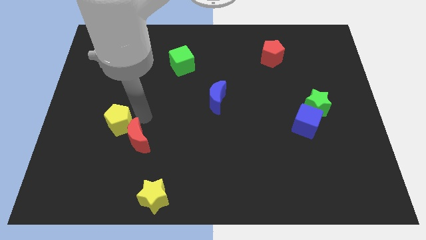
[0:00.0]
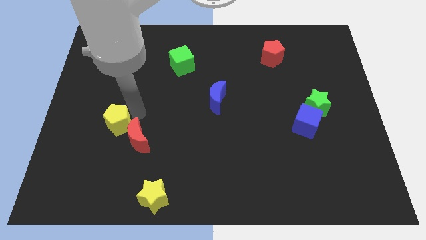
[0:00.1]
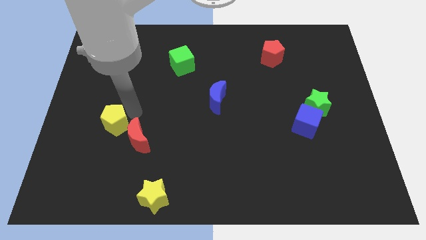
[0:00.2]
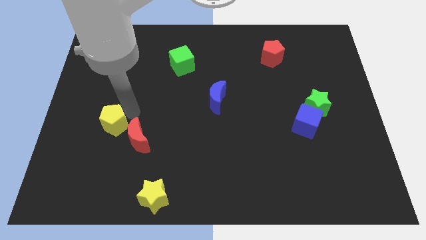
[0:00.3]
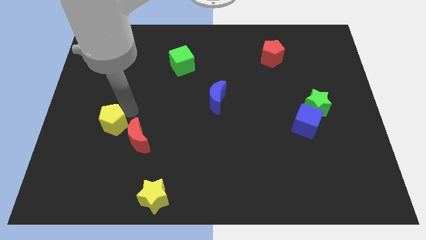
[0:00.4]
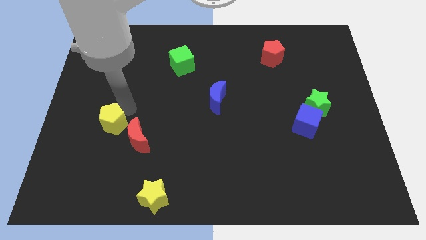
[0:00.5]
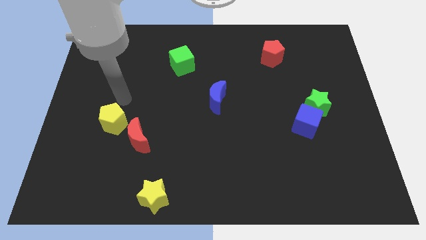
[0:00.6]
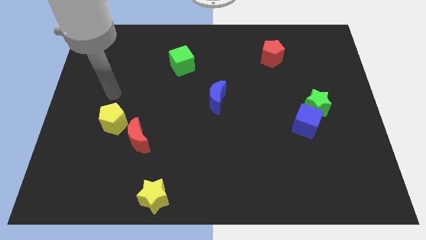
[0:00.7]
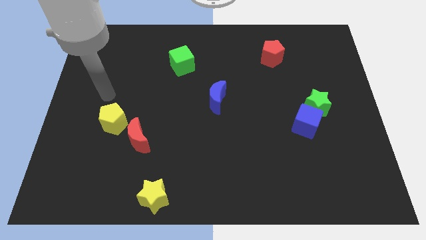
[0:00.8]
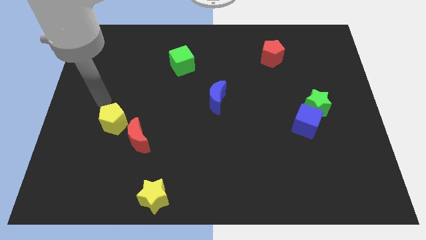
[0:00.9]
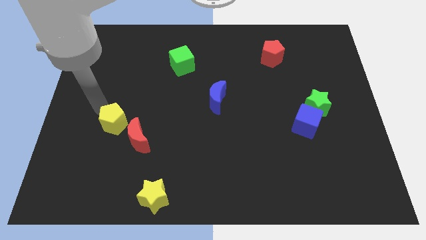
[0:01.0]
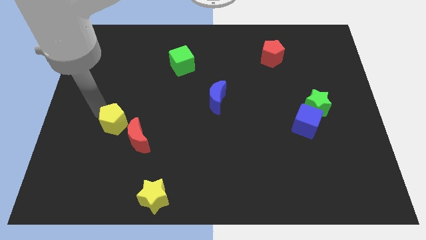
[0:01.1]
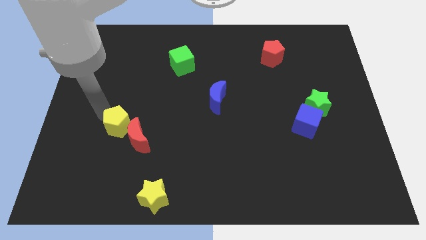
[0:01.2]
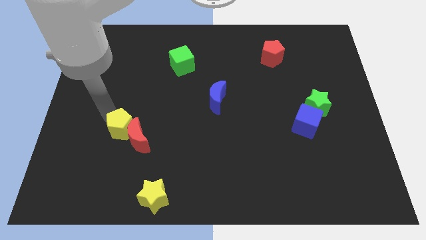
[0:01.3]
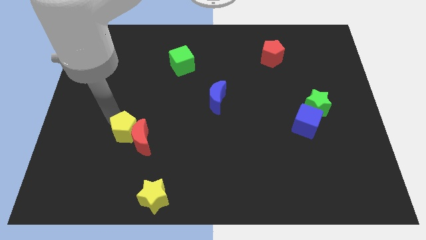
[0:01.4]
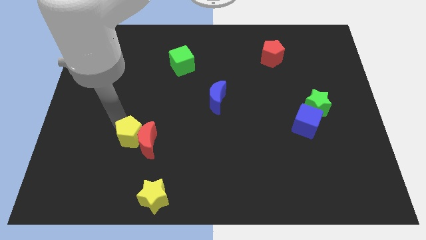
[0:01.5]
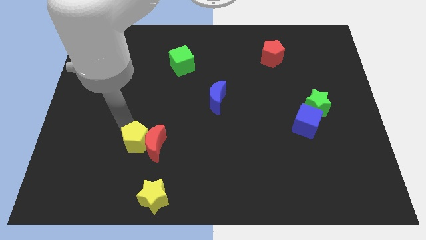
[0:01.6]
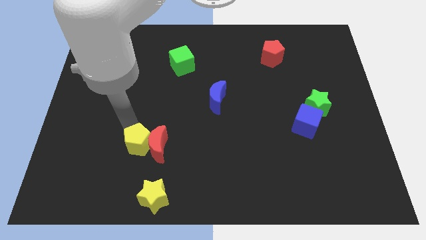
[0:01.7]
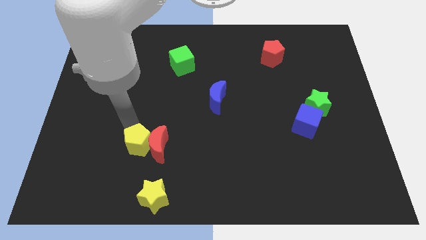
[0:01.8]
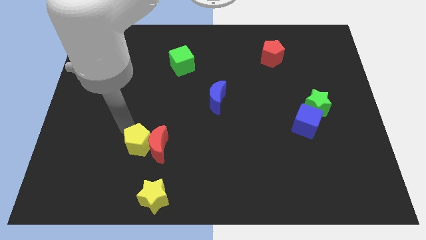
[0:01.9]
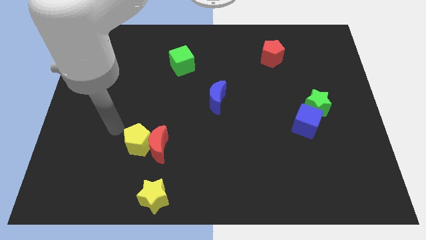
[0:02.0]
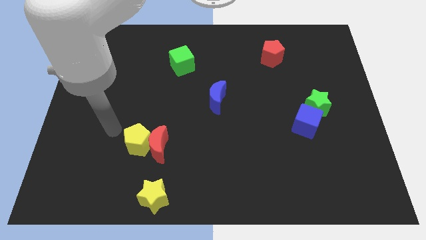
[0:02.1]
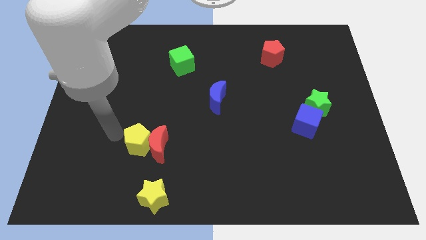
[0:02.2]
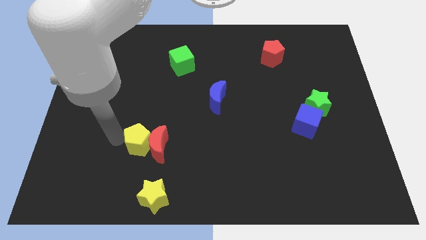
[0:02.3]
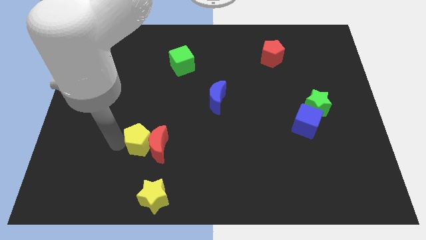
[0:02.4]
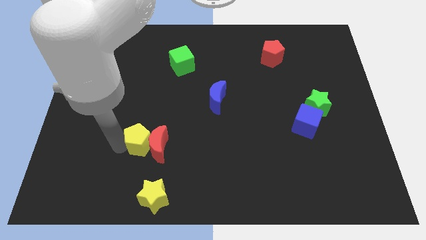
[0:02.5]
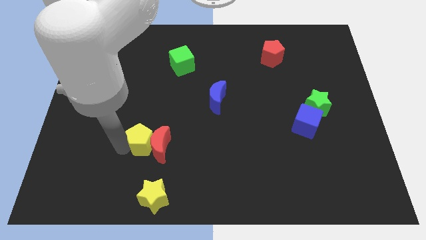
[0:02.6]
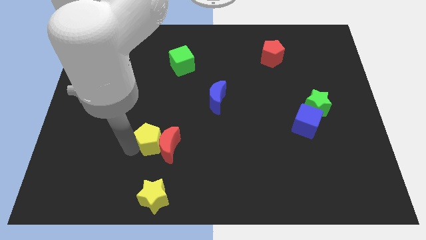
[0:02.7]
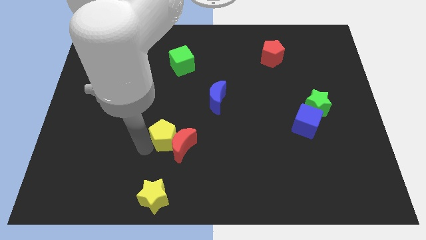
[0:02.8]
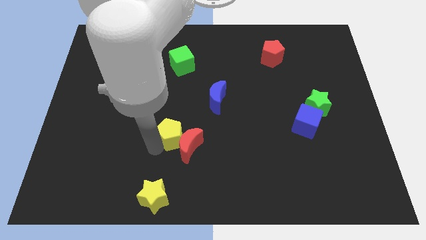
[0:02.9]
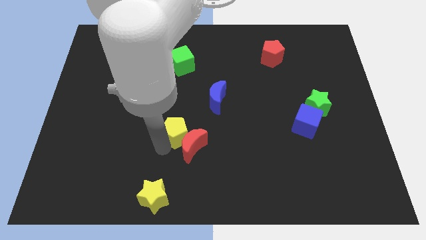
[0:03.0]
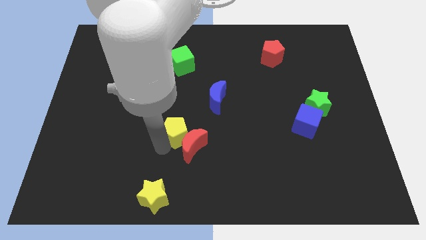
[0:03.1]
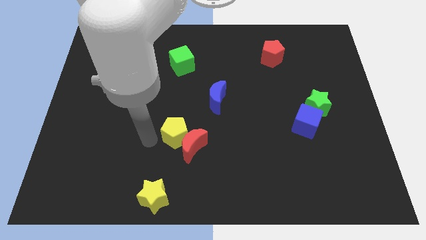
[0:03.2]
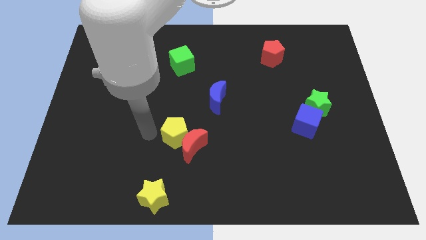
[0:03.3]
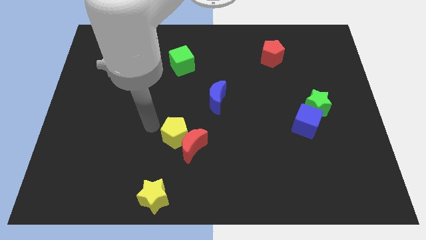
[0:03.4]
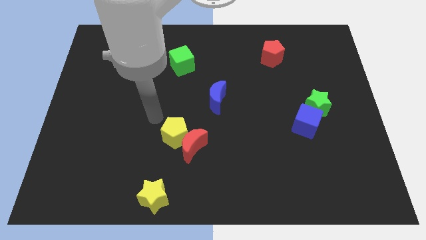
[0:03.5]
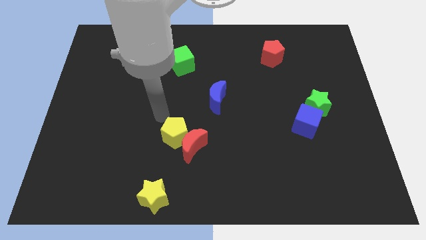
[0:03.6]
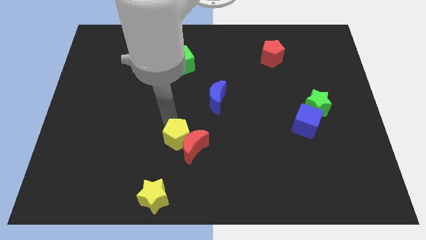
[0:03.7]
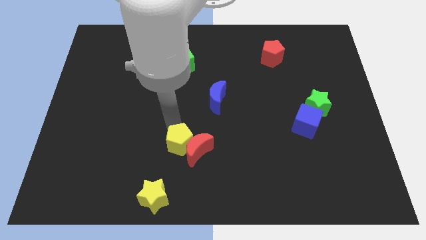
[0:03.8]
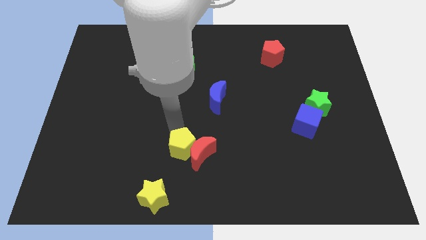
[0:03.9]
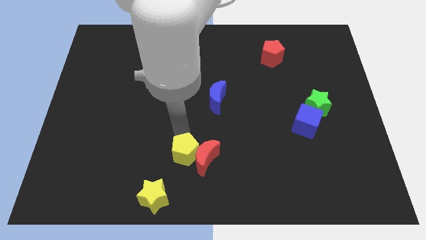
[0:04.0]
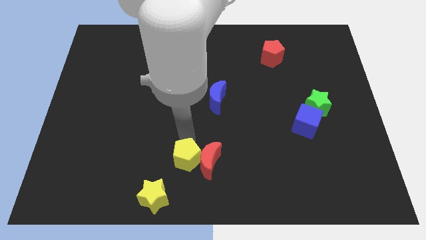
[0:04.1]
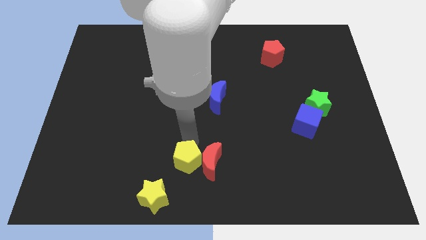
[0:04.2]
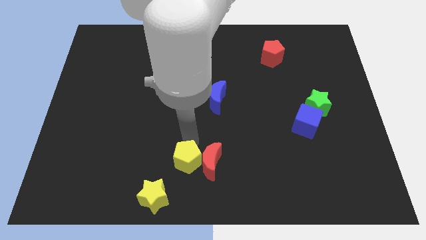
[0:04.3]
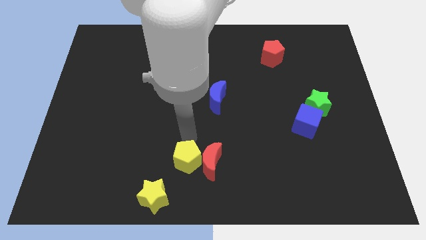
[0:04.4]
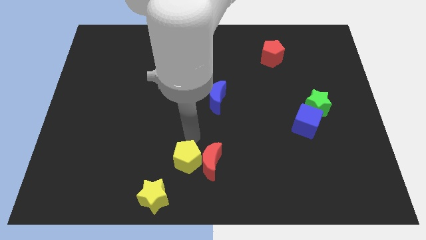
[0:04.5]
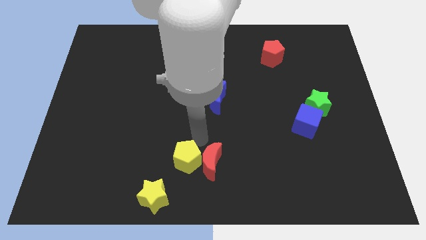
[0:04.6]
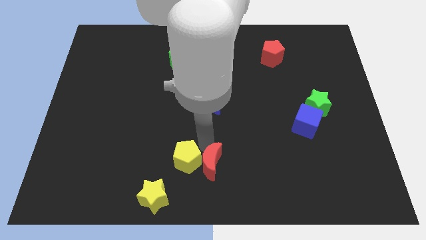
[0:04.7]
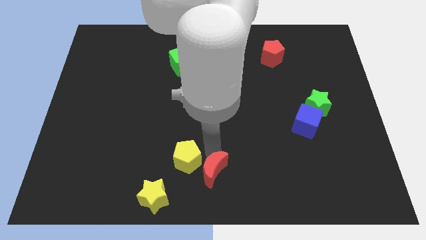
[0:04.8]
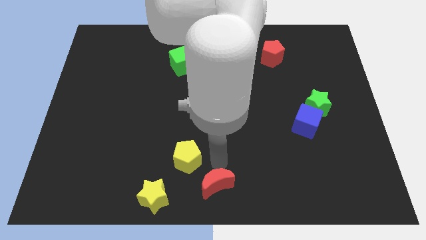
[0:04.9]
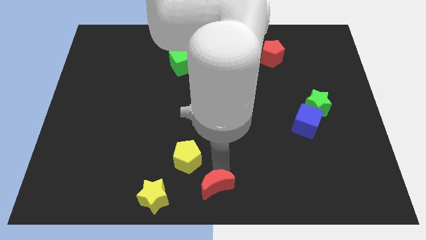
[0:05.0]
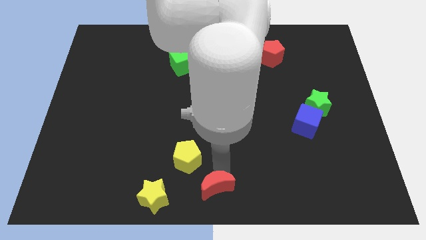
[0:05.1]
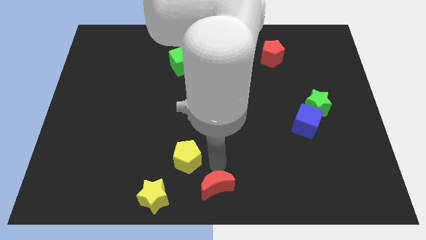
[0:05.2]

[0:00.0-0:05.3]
push the yellow pentagon into the red crescent towards the bottom center

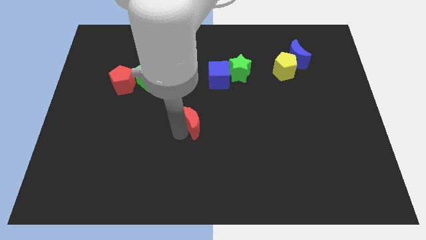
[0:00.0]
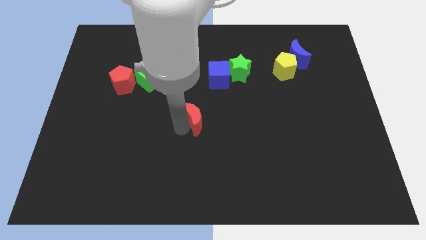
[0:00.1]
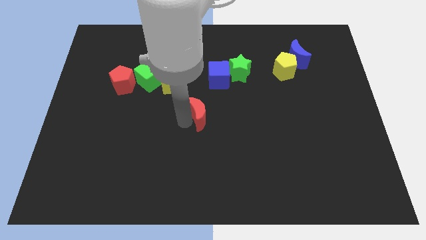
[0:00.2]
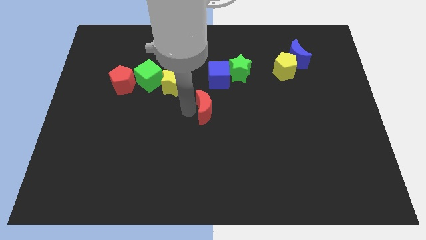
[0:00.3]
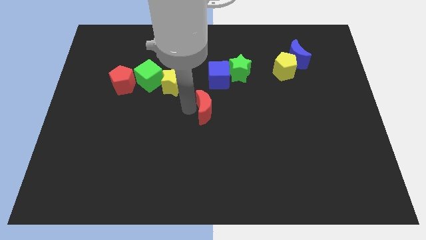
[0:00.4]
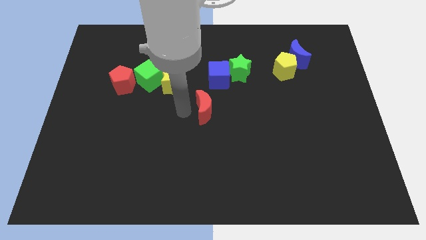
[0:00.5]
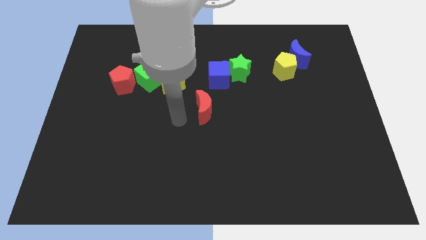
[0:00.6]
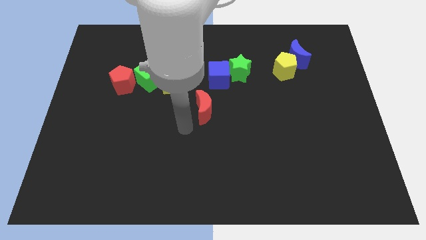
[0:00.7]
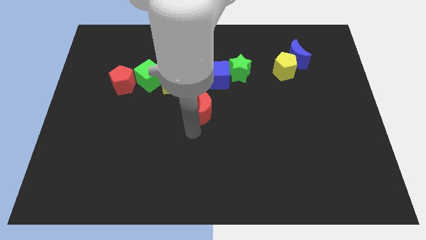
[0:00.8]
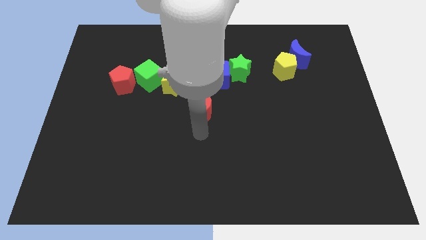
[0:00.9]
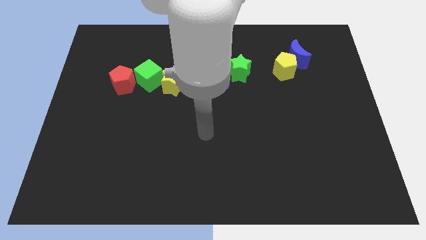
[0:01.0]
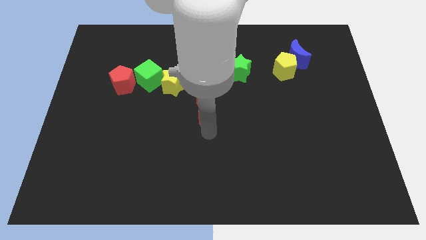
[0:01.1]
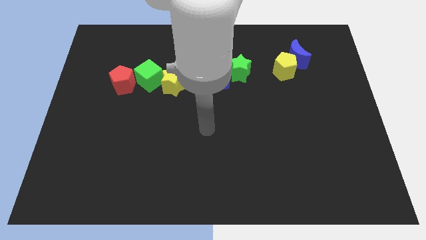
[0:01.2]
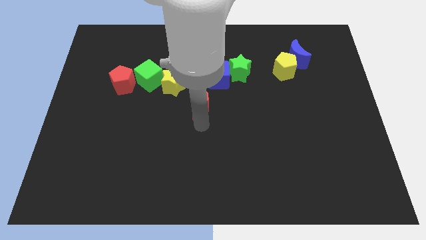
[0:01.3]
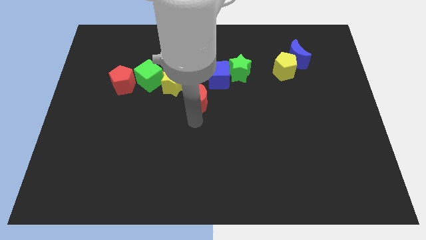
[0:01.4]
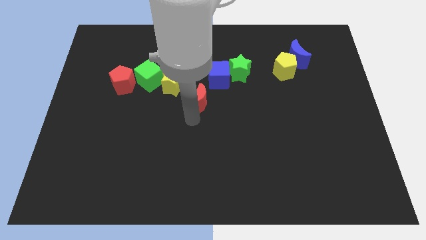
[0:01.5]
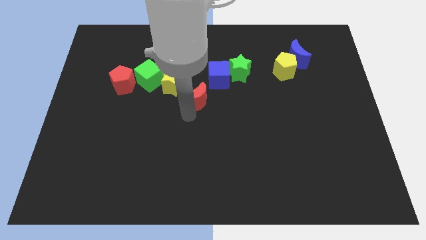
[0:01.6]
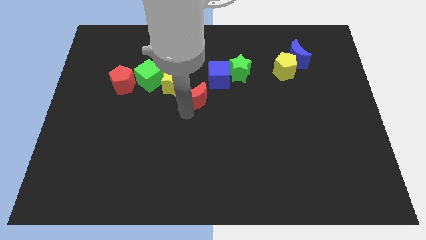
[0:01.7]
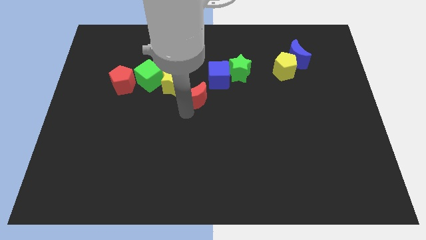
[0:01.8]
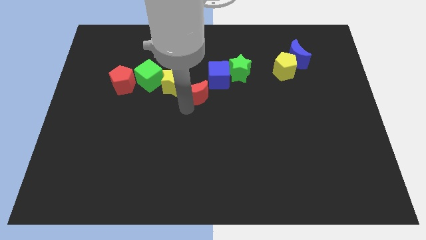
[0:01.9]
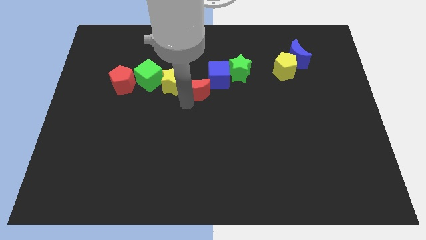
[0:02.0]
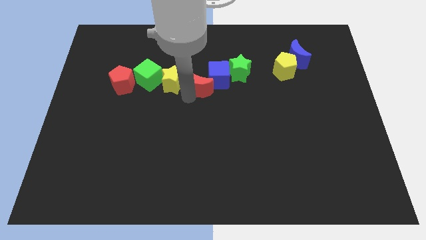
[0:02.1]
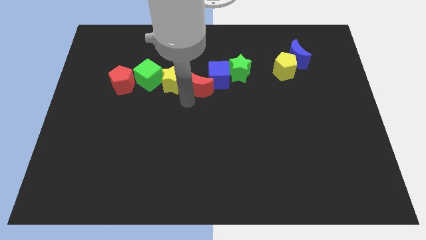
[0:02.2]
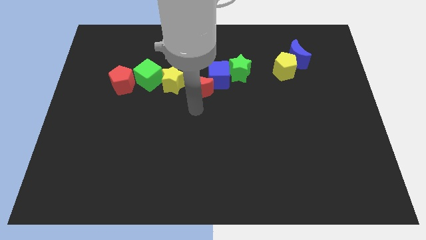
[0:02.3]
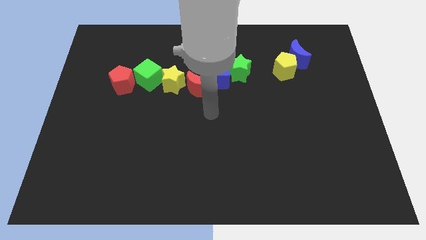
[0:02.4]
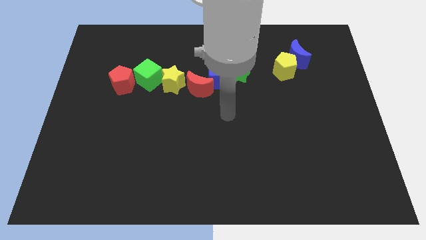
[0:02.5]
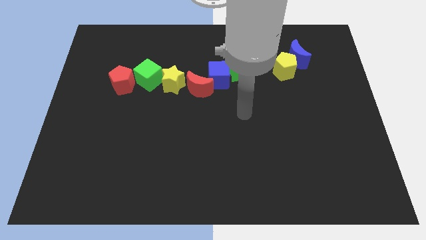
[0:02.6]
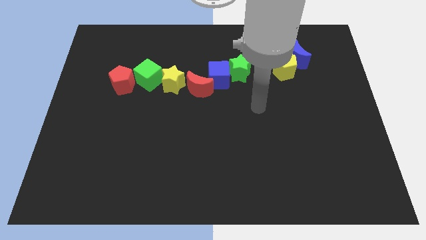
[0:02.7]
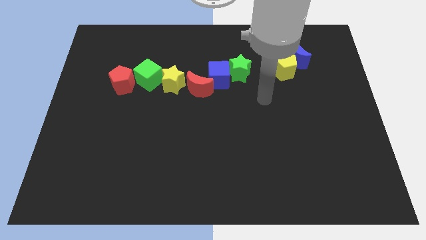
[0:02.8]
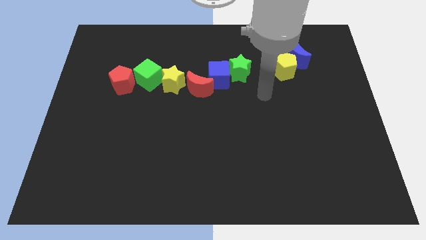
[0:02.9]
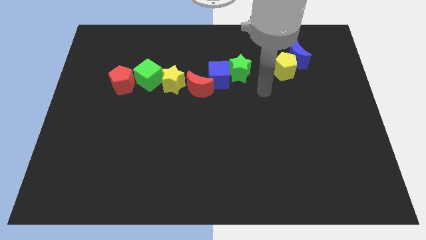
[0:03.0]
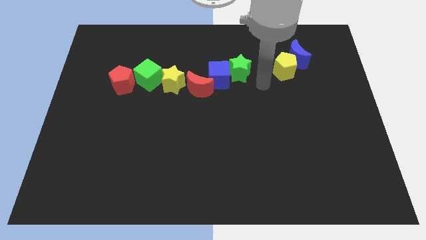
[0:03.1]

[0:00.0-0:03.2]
put the red moon parallel right to the yellow star

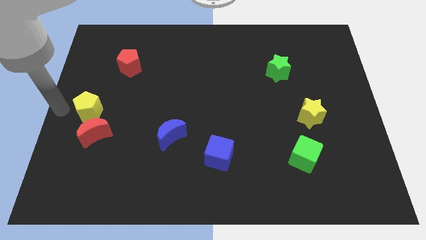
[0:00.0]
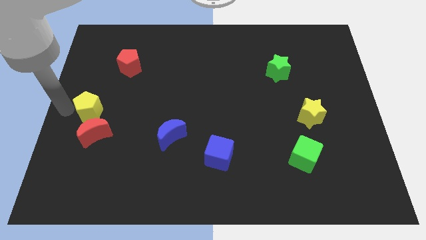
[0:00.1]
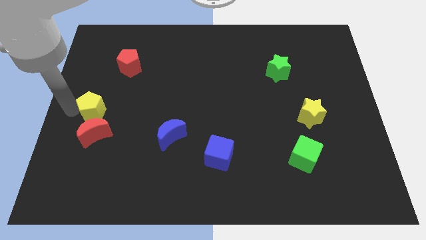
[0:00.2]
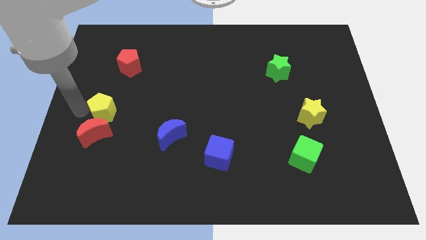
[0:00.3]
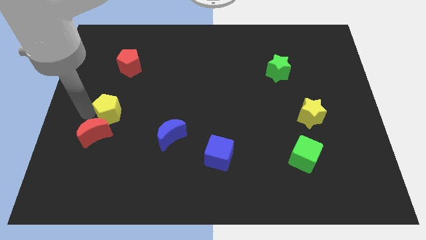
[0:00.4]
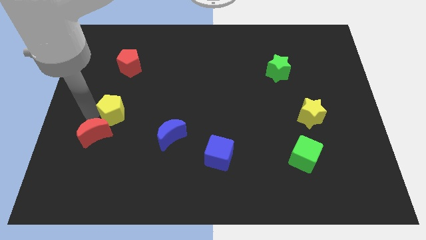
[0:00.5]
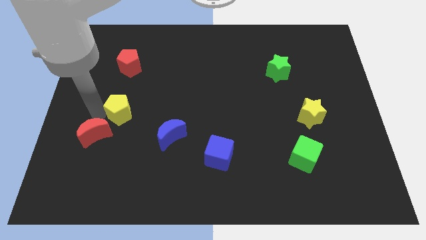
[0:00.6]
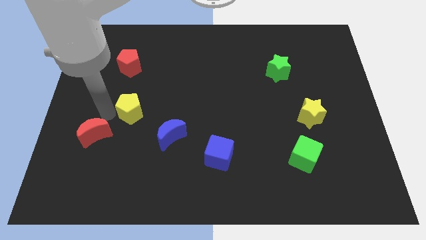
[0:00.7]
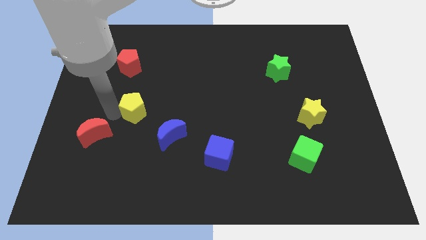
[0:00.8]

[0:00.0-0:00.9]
push yellow pentagon below red pentagon
